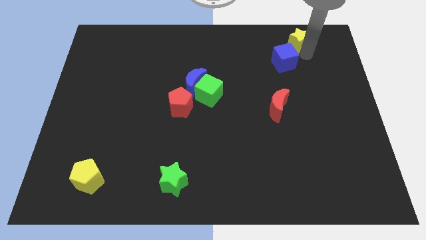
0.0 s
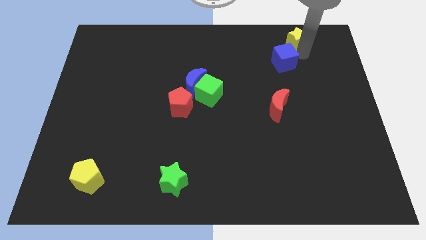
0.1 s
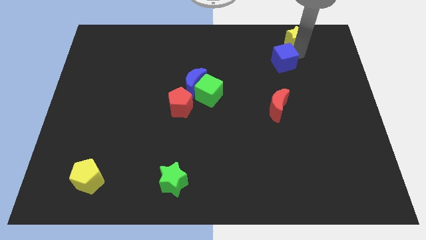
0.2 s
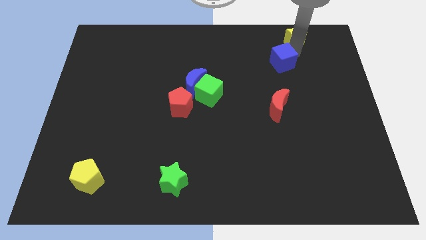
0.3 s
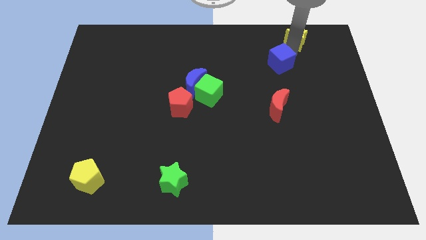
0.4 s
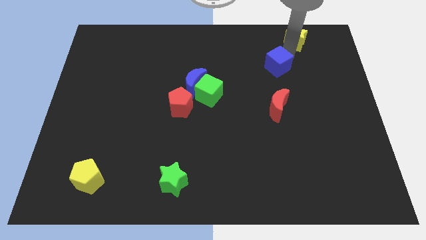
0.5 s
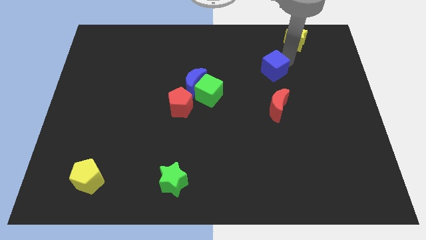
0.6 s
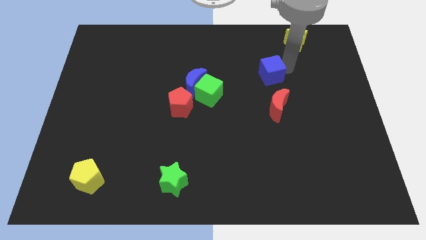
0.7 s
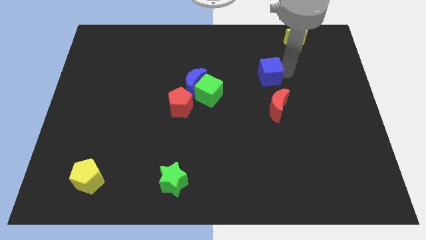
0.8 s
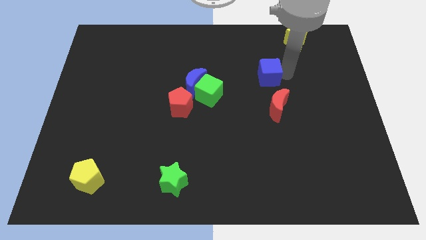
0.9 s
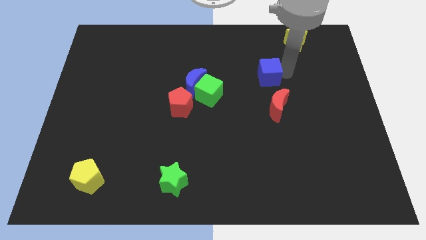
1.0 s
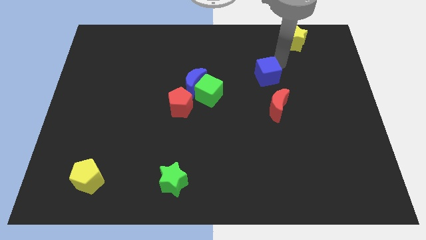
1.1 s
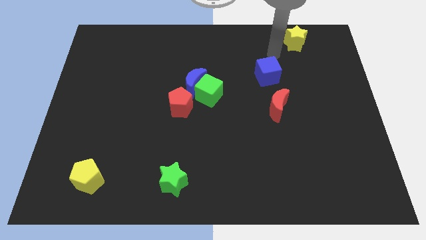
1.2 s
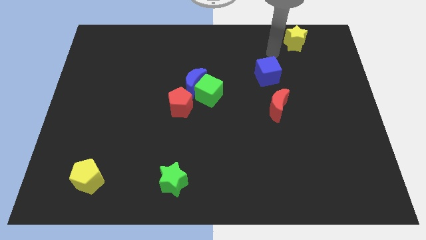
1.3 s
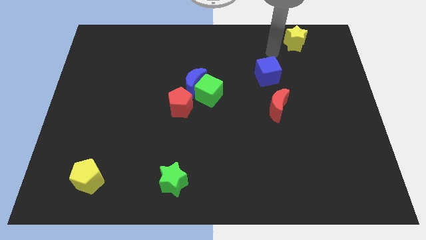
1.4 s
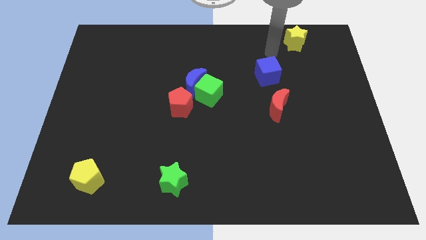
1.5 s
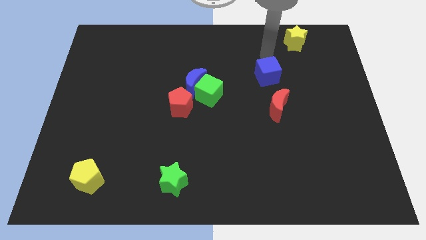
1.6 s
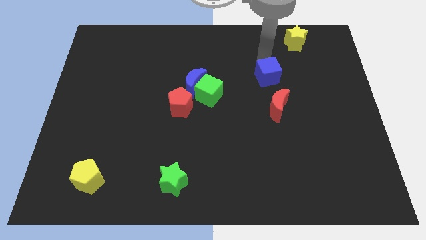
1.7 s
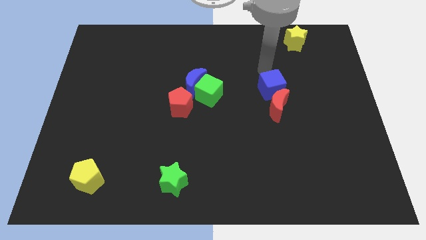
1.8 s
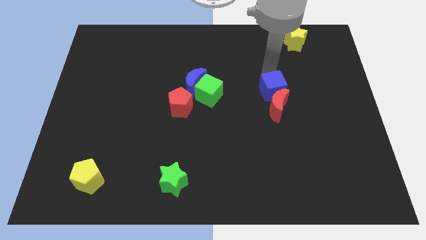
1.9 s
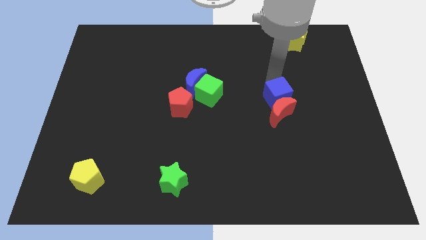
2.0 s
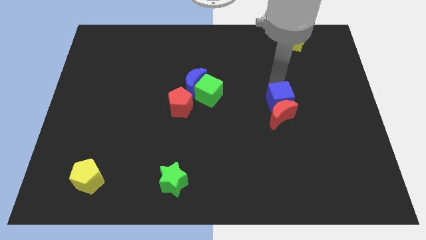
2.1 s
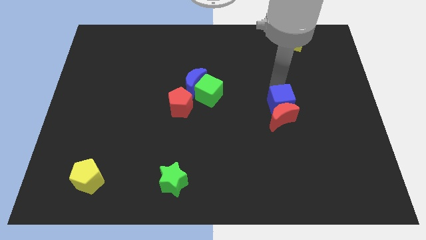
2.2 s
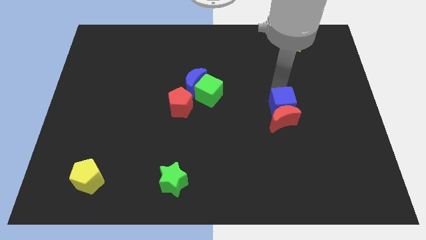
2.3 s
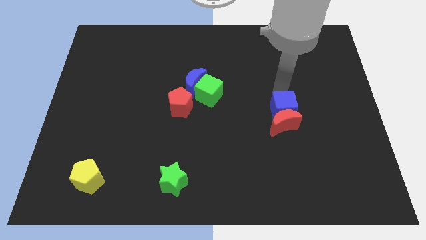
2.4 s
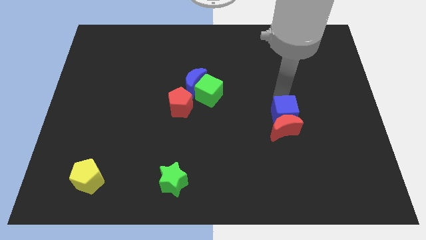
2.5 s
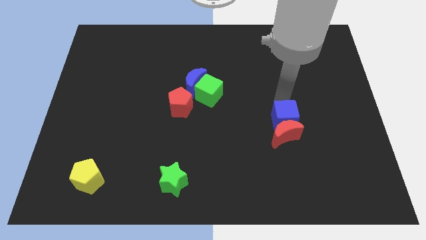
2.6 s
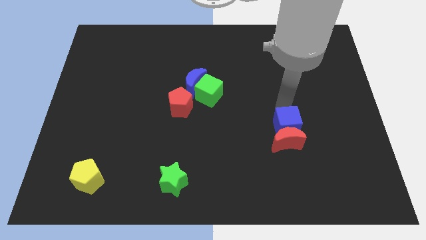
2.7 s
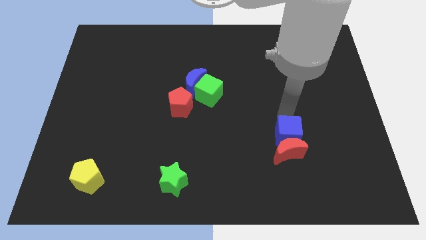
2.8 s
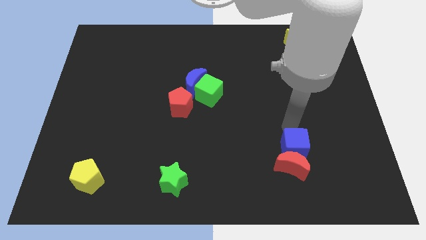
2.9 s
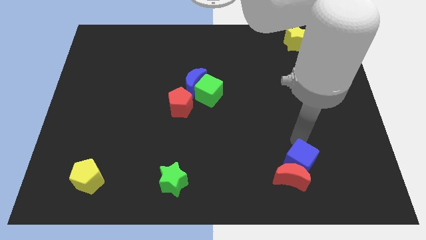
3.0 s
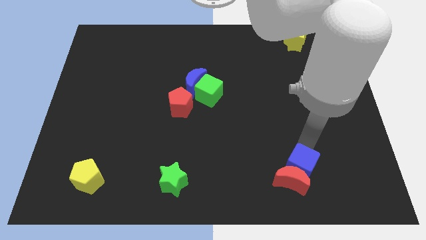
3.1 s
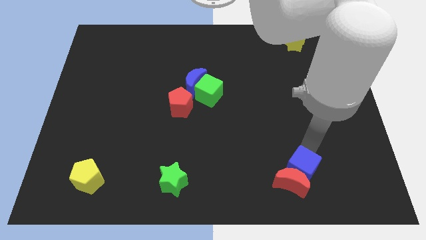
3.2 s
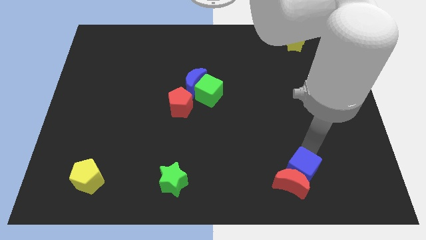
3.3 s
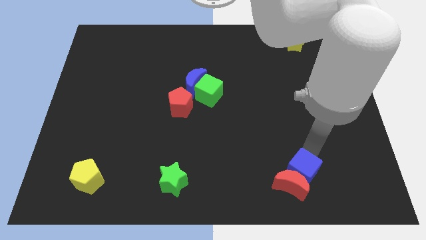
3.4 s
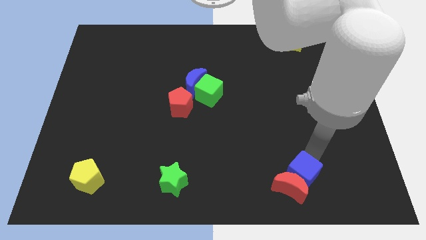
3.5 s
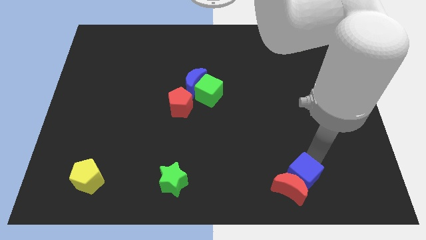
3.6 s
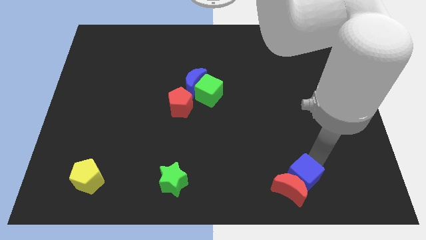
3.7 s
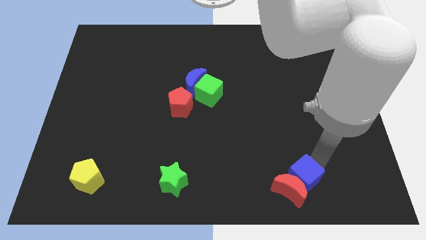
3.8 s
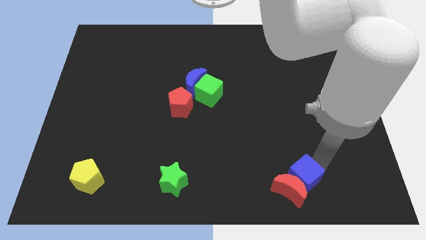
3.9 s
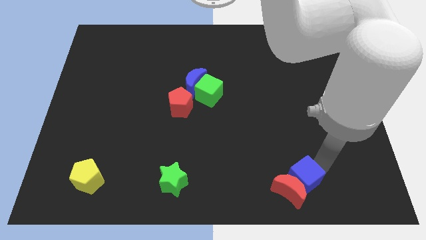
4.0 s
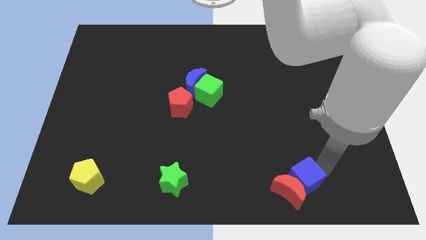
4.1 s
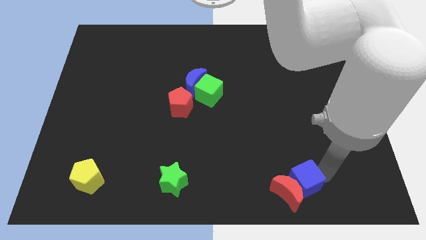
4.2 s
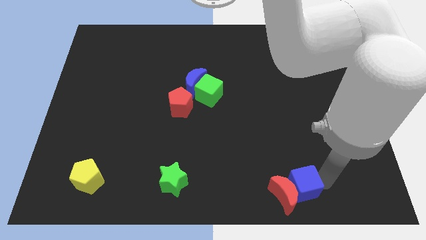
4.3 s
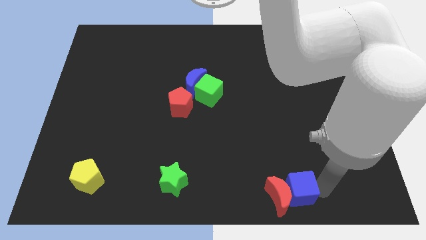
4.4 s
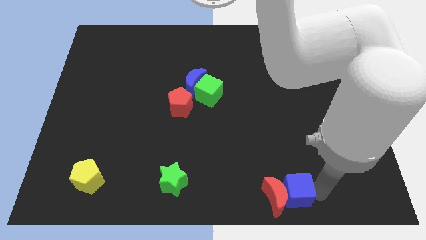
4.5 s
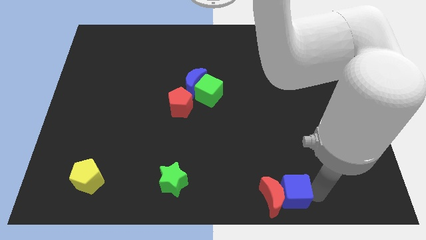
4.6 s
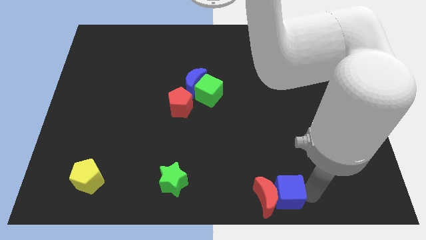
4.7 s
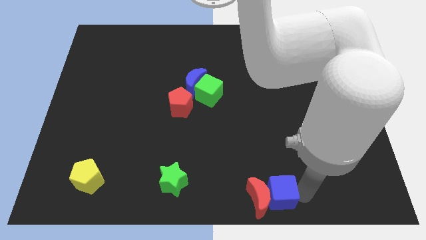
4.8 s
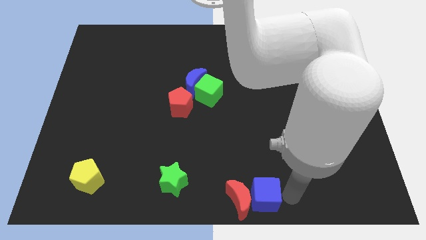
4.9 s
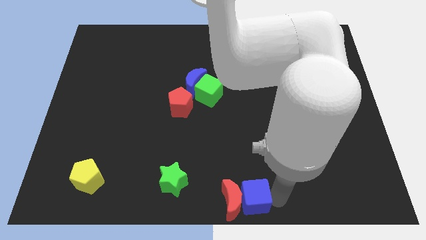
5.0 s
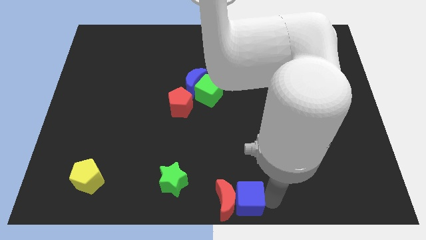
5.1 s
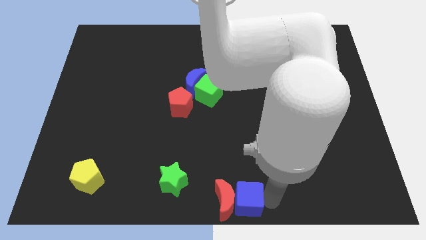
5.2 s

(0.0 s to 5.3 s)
push the blue cube and red moon towards the bottom center of the table

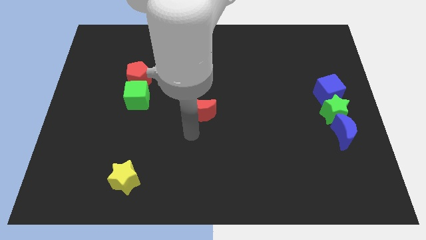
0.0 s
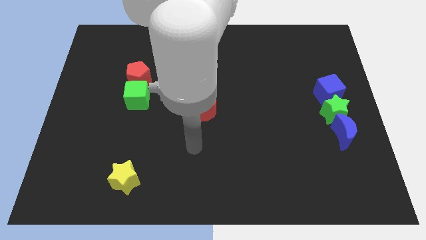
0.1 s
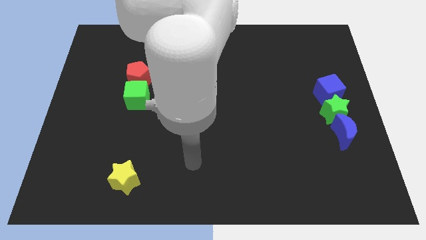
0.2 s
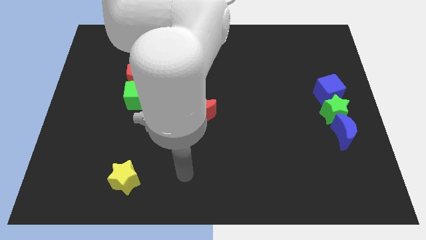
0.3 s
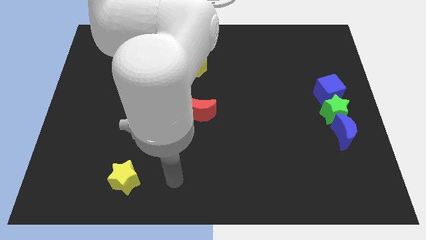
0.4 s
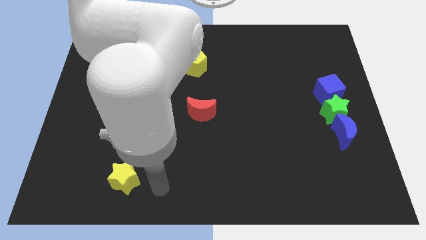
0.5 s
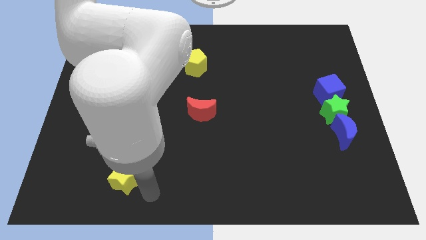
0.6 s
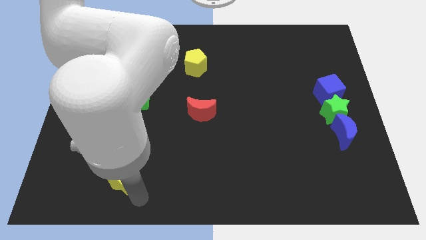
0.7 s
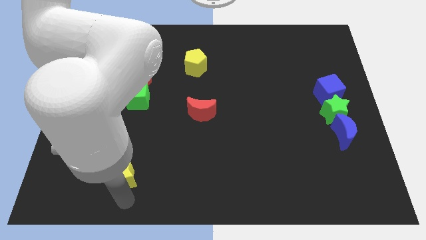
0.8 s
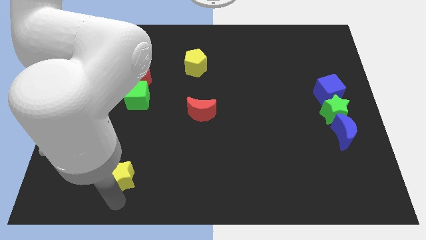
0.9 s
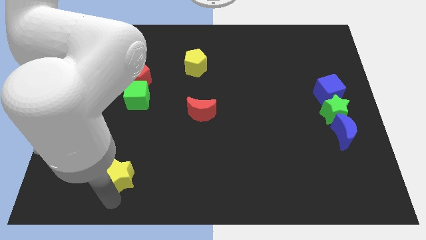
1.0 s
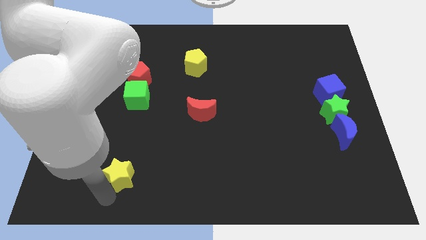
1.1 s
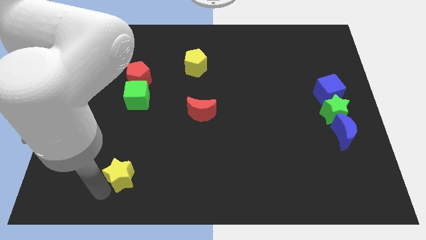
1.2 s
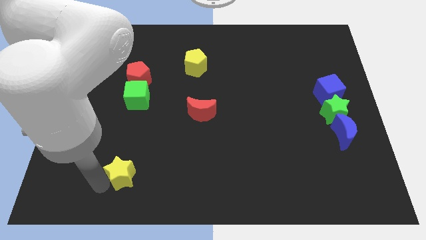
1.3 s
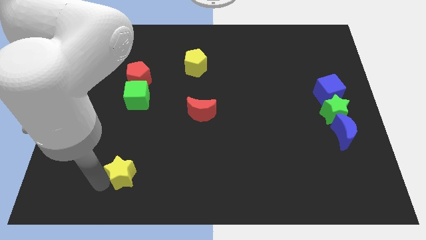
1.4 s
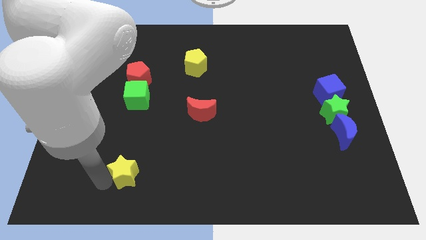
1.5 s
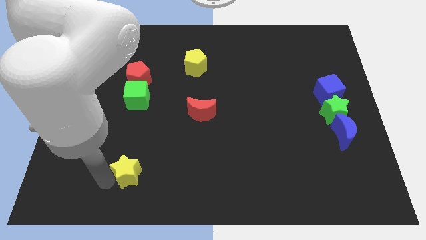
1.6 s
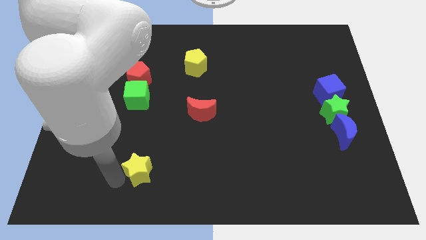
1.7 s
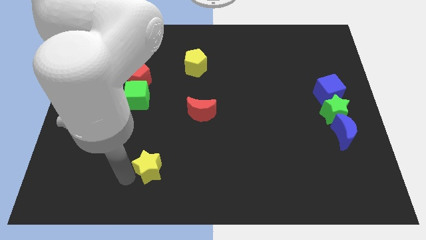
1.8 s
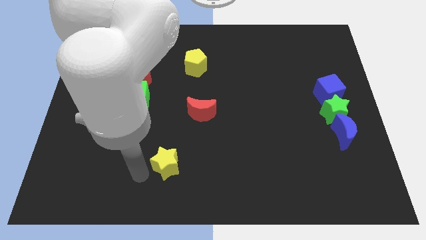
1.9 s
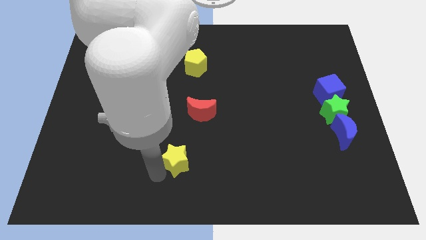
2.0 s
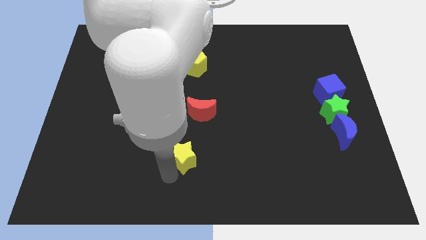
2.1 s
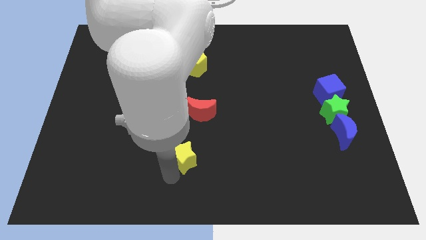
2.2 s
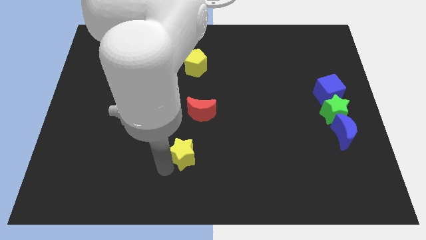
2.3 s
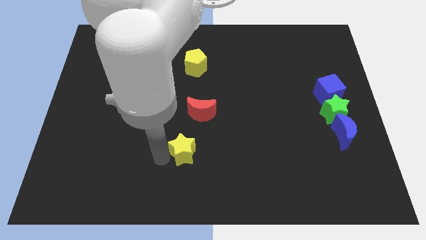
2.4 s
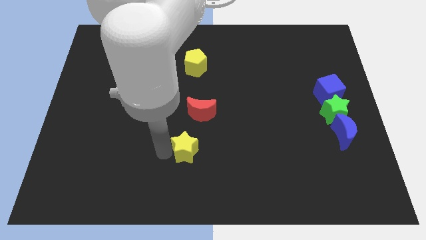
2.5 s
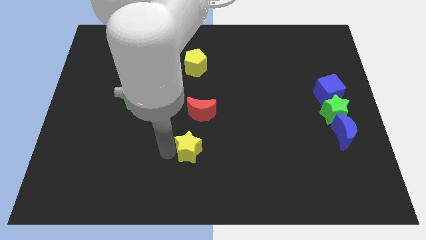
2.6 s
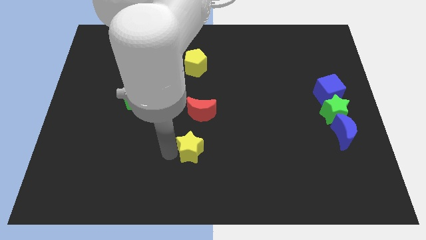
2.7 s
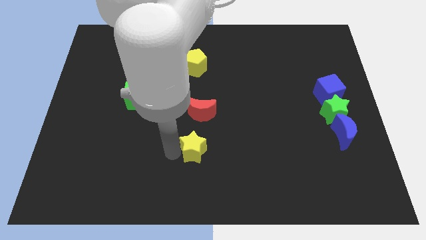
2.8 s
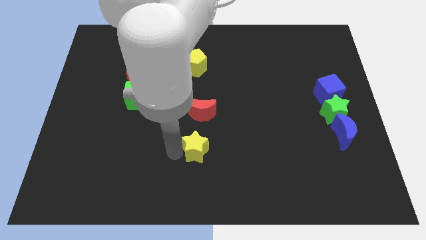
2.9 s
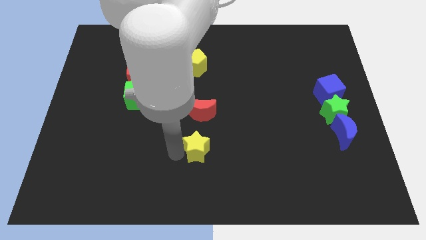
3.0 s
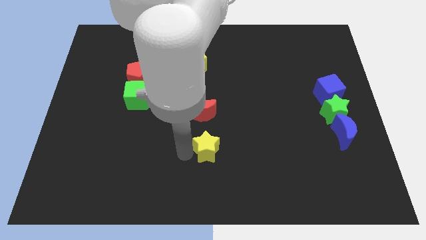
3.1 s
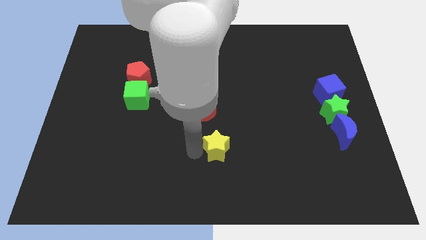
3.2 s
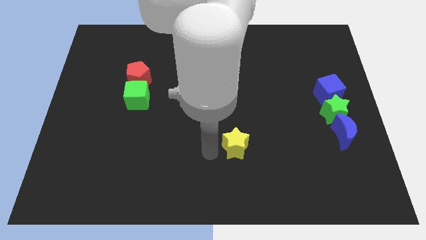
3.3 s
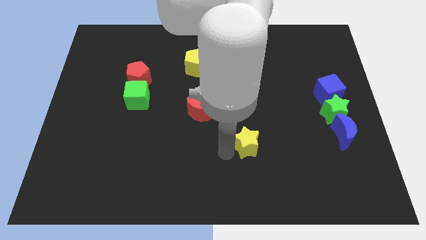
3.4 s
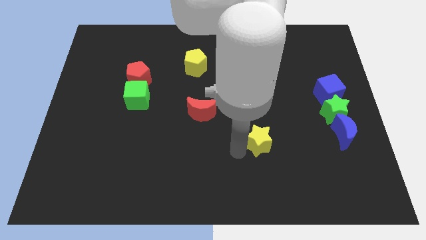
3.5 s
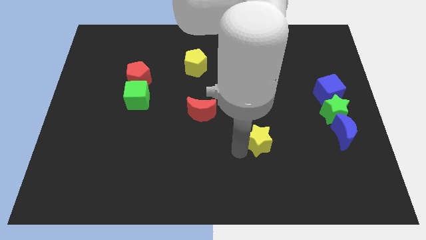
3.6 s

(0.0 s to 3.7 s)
move the yellow star to the right of the board

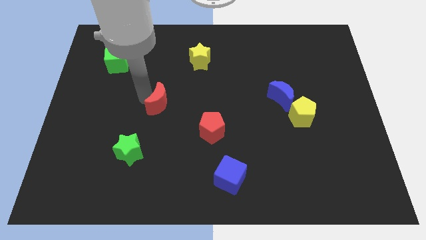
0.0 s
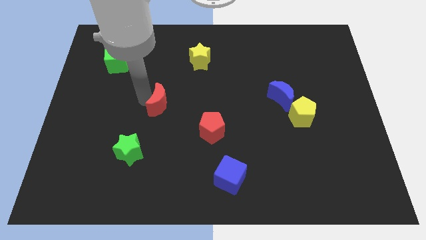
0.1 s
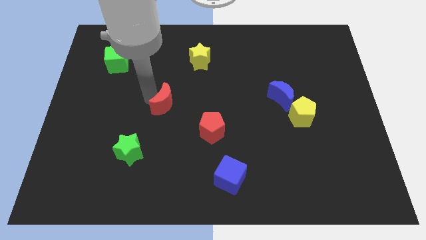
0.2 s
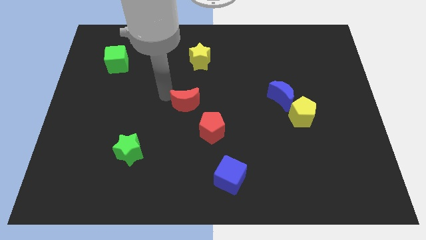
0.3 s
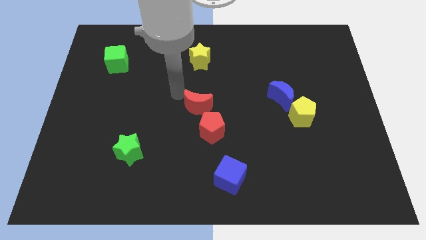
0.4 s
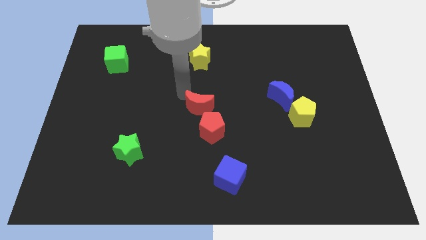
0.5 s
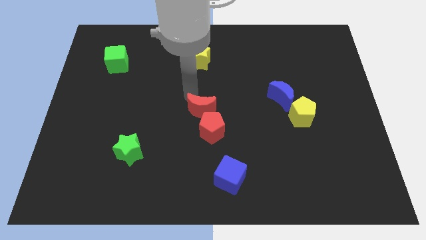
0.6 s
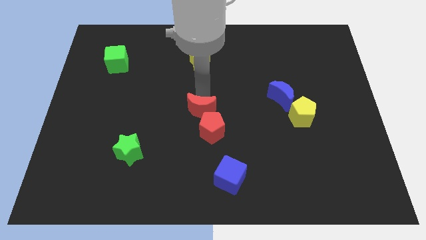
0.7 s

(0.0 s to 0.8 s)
place red moon to the top of red pentagon
